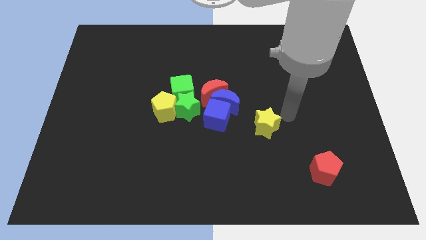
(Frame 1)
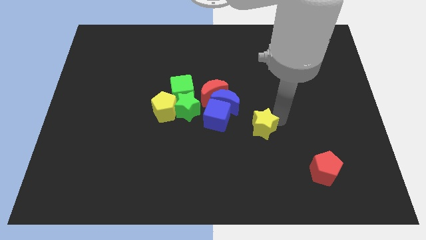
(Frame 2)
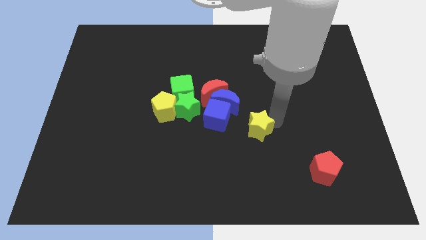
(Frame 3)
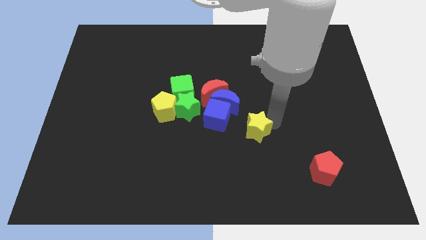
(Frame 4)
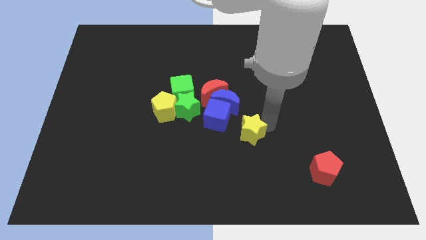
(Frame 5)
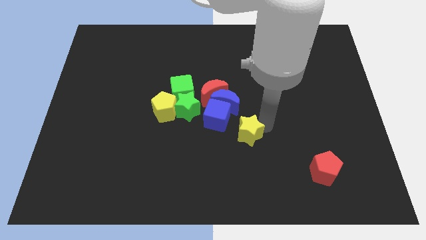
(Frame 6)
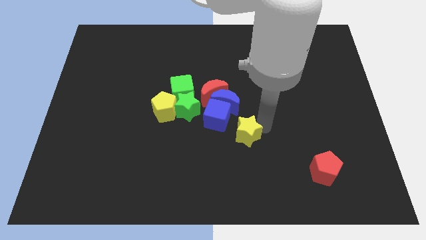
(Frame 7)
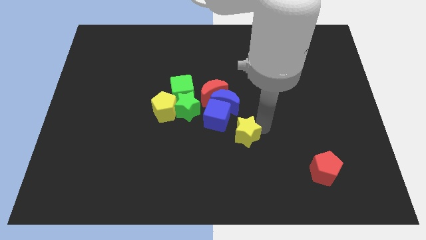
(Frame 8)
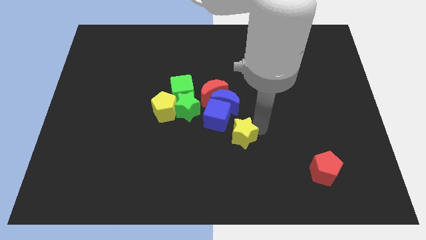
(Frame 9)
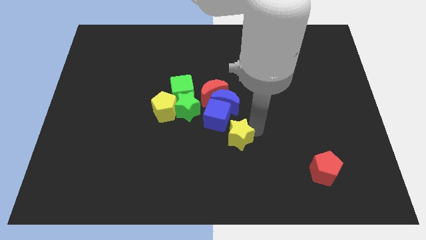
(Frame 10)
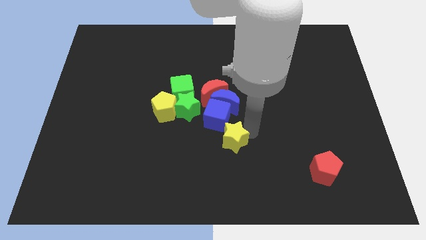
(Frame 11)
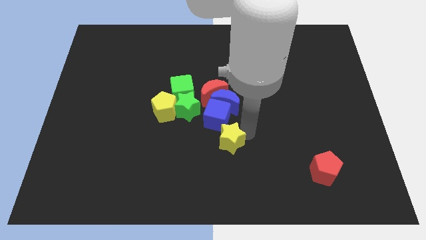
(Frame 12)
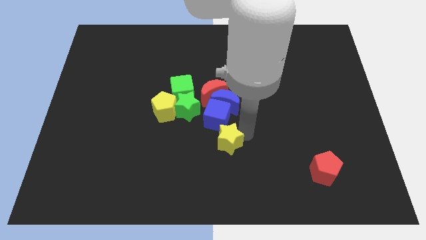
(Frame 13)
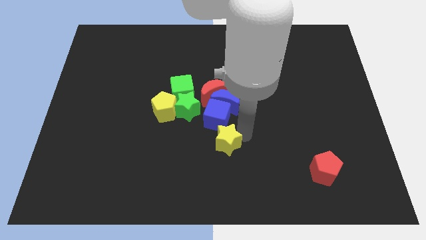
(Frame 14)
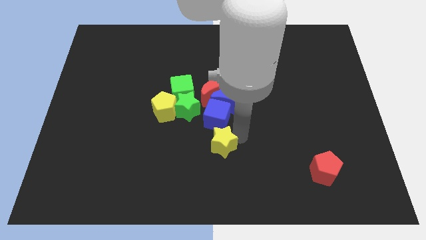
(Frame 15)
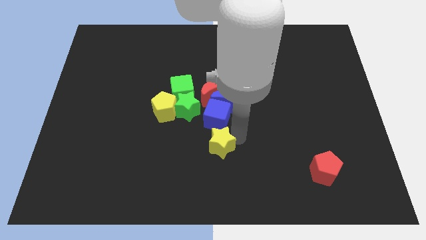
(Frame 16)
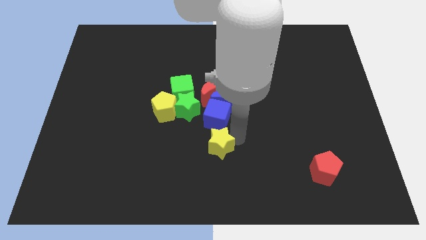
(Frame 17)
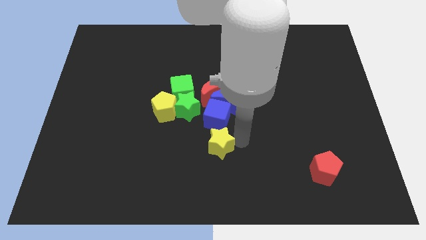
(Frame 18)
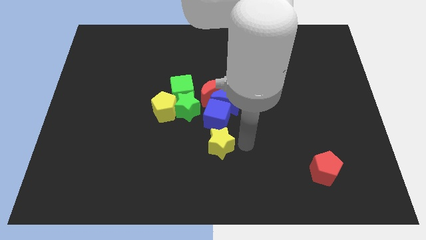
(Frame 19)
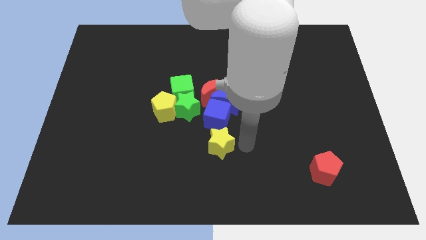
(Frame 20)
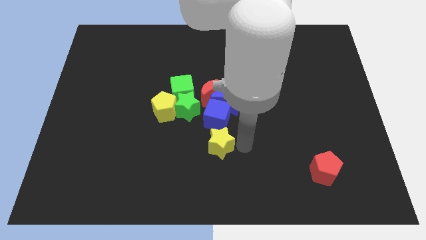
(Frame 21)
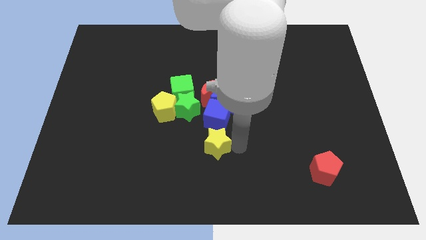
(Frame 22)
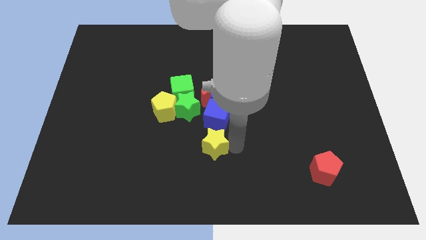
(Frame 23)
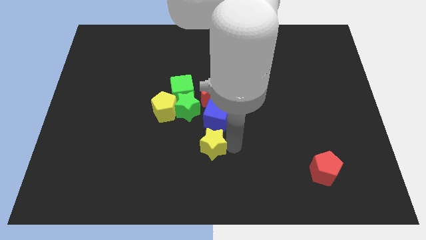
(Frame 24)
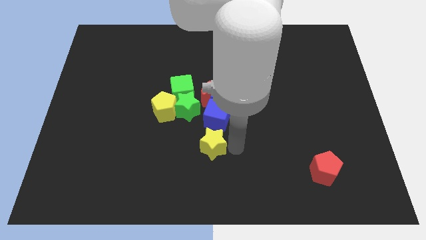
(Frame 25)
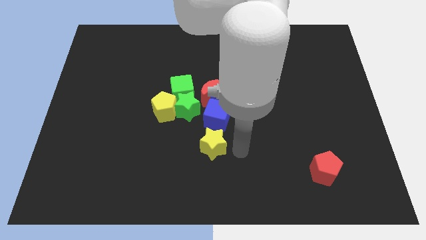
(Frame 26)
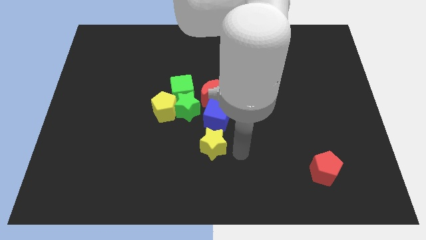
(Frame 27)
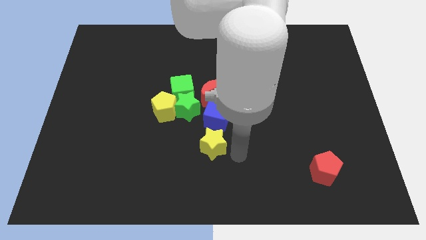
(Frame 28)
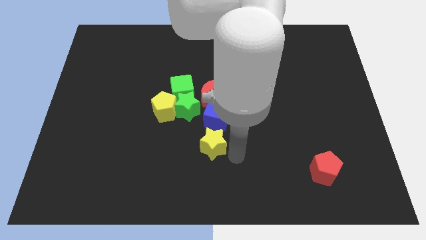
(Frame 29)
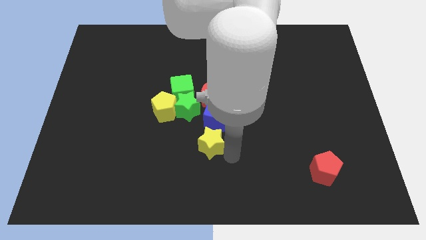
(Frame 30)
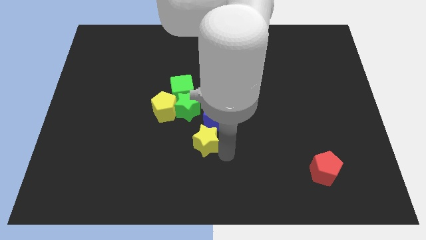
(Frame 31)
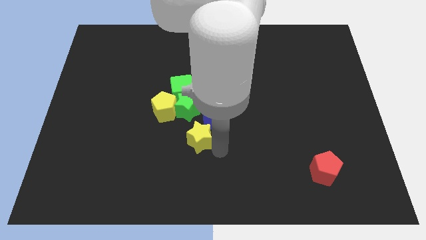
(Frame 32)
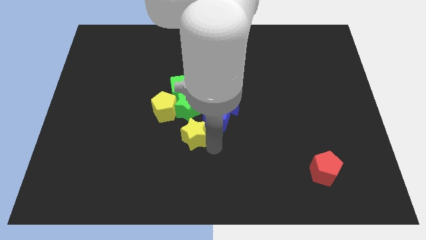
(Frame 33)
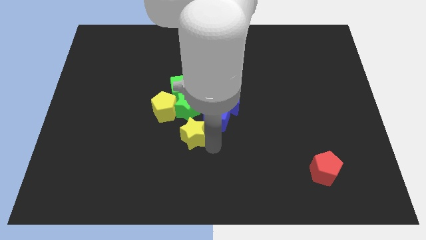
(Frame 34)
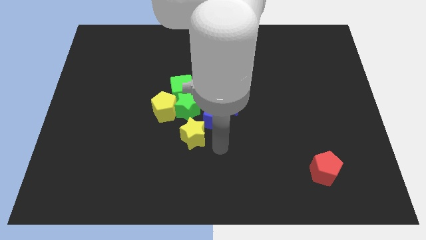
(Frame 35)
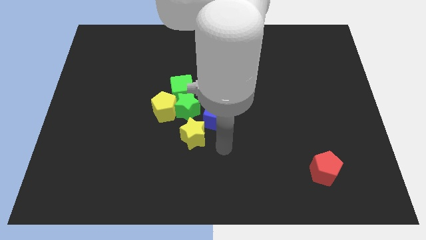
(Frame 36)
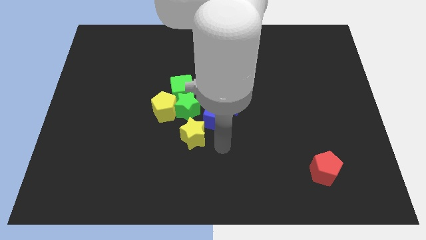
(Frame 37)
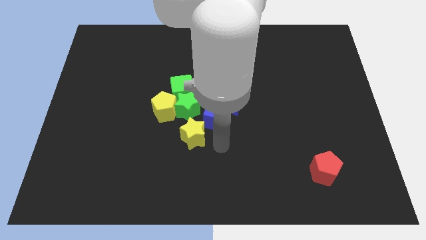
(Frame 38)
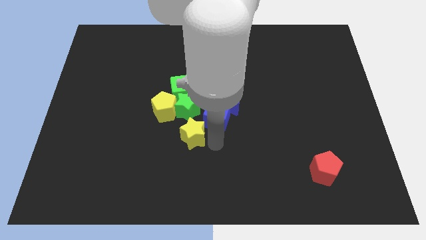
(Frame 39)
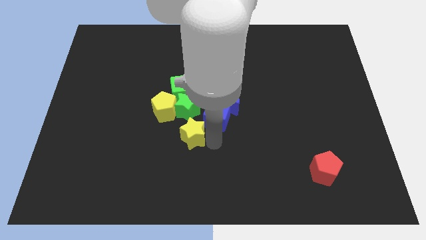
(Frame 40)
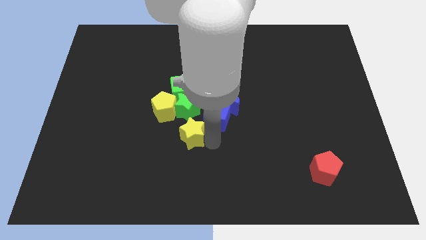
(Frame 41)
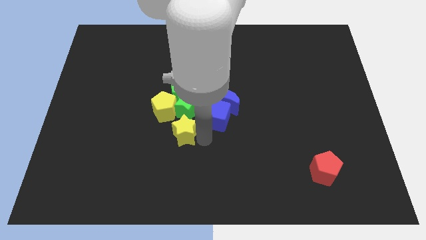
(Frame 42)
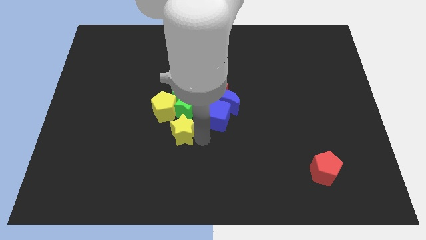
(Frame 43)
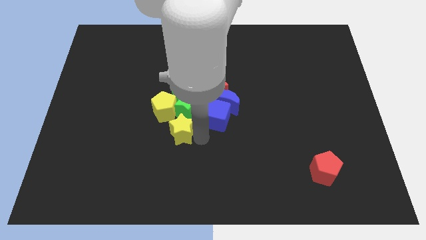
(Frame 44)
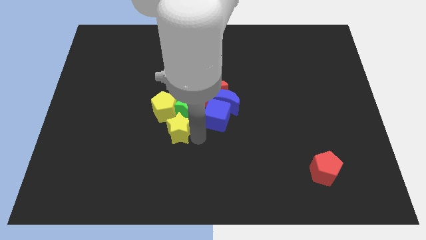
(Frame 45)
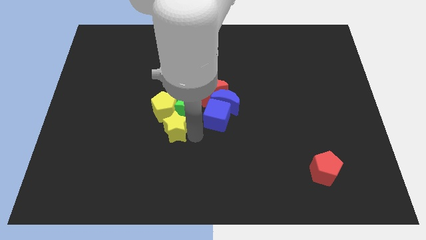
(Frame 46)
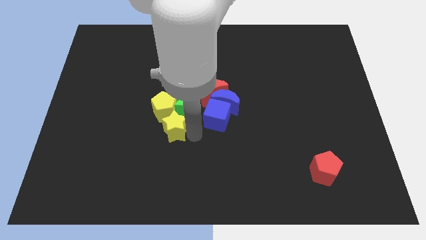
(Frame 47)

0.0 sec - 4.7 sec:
place the yellow star to the bottom right of the yellow pentagon

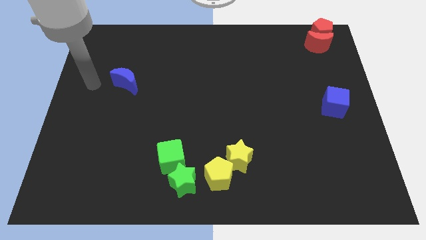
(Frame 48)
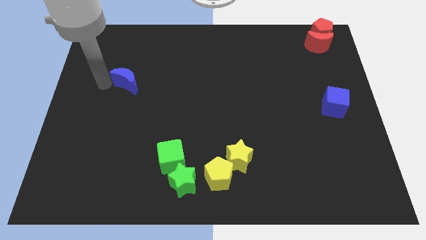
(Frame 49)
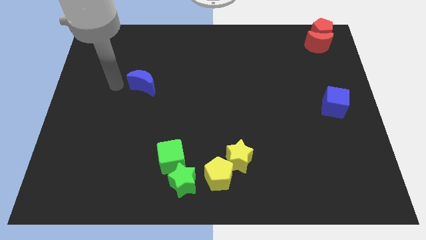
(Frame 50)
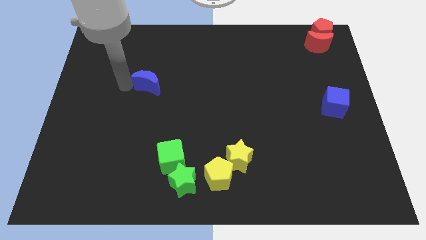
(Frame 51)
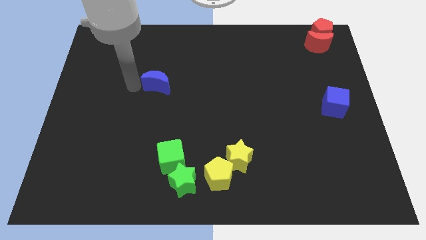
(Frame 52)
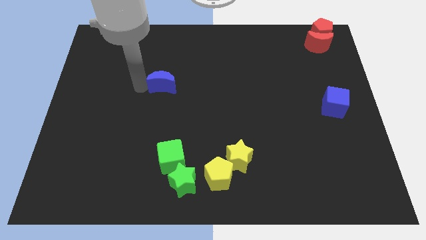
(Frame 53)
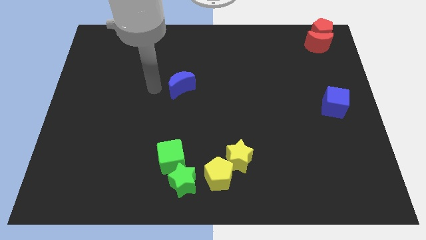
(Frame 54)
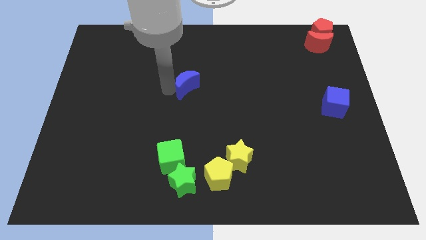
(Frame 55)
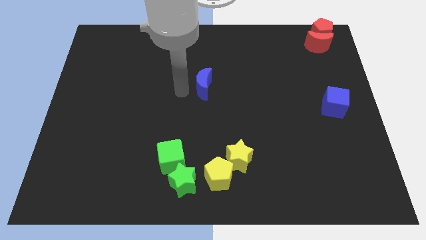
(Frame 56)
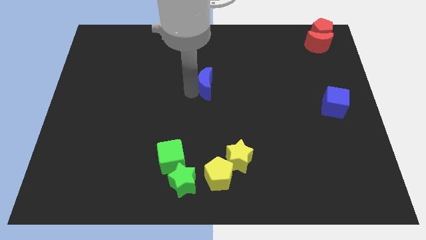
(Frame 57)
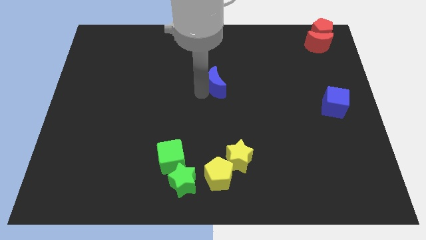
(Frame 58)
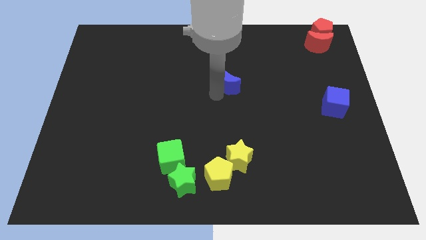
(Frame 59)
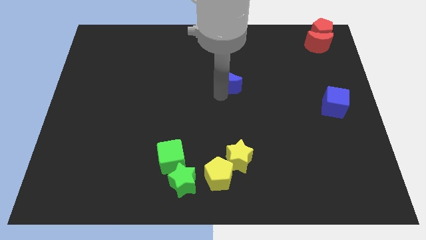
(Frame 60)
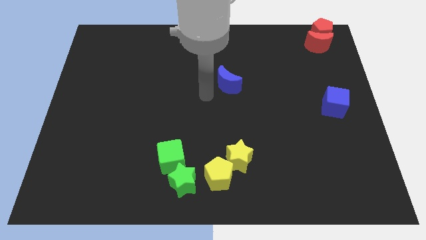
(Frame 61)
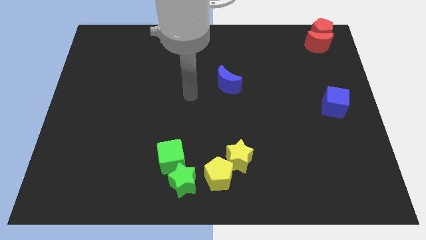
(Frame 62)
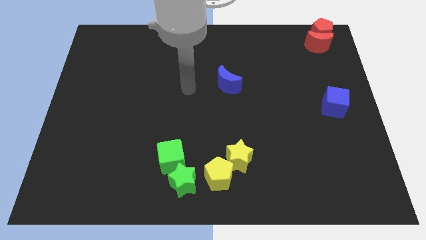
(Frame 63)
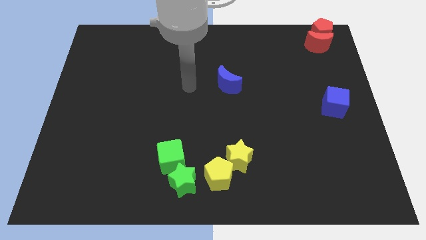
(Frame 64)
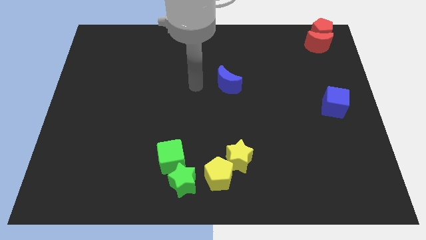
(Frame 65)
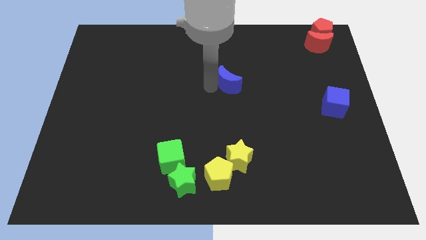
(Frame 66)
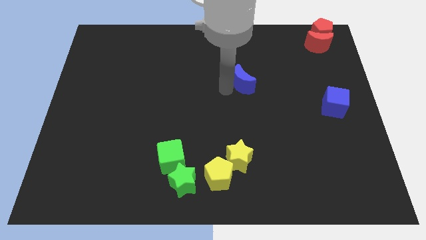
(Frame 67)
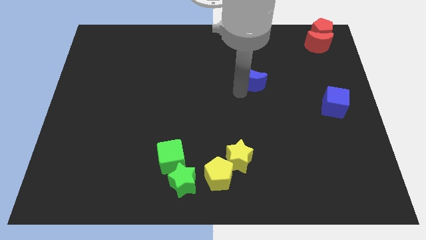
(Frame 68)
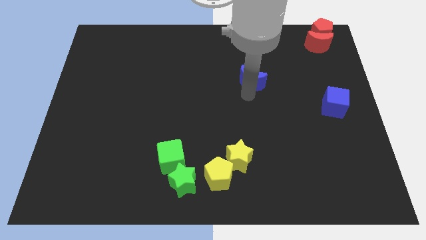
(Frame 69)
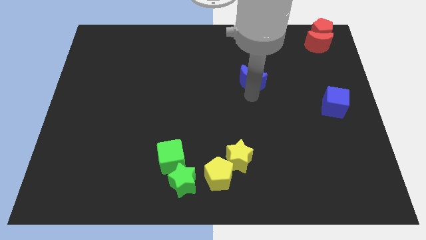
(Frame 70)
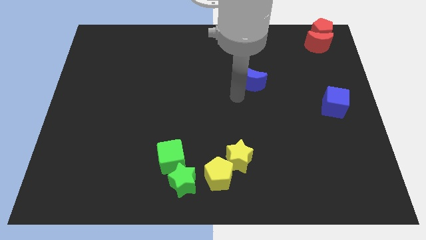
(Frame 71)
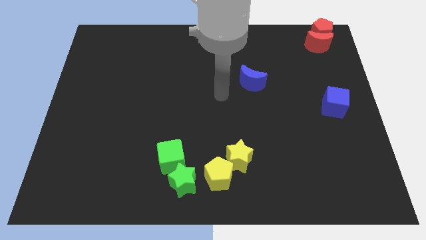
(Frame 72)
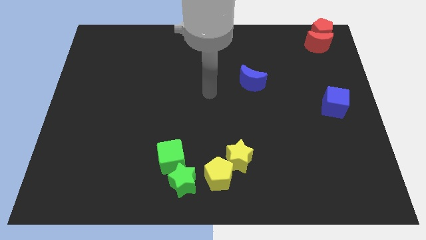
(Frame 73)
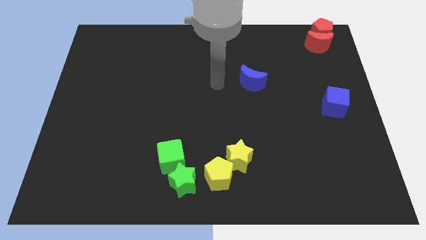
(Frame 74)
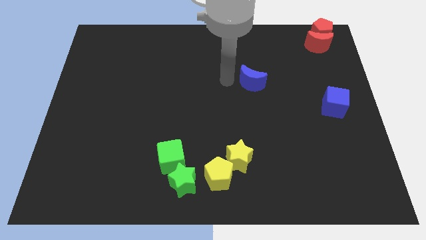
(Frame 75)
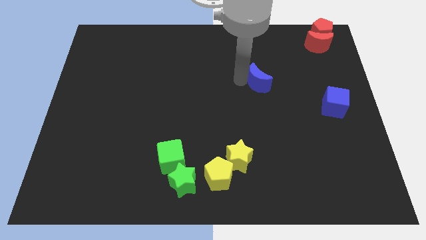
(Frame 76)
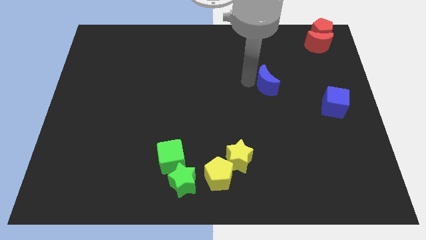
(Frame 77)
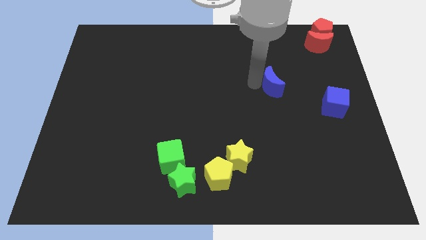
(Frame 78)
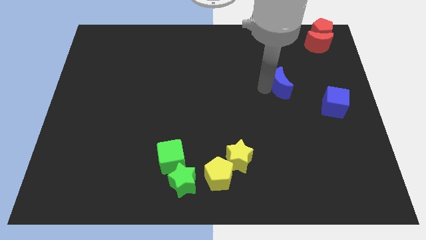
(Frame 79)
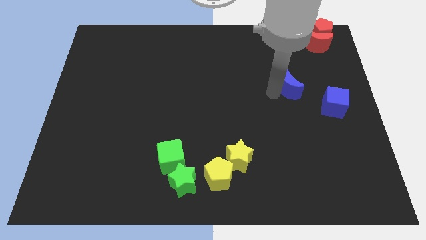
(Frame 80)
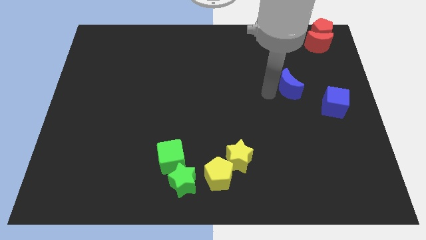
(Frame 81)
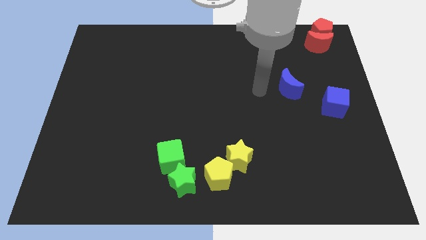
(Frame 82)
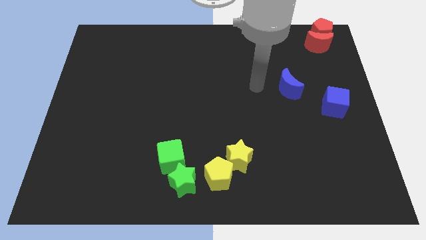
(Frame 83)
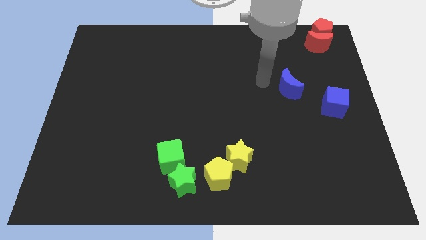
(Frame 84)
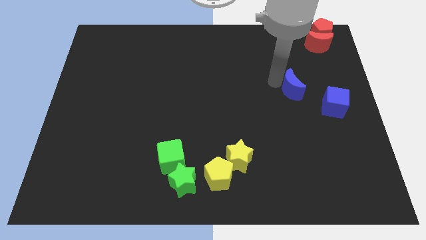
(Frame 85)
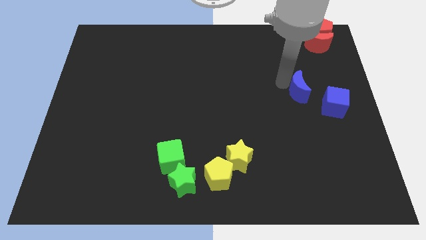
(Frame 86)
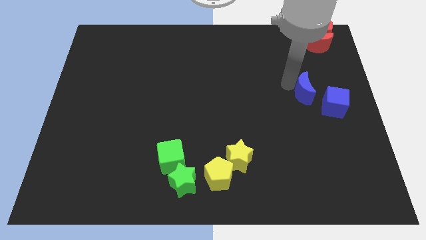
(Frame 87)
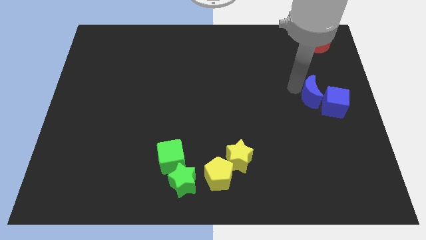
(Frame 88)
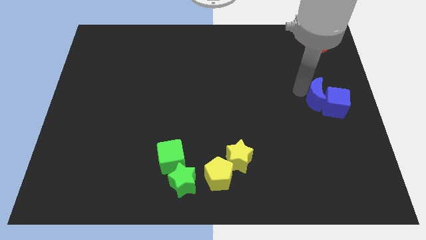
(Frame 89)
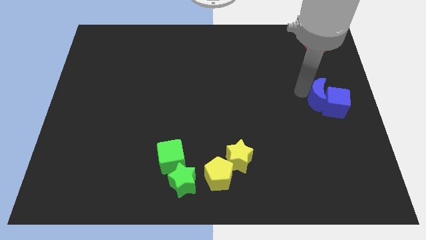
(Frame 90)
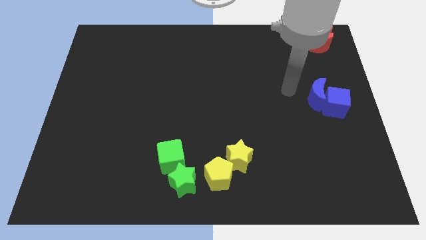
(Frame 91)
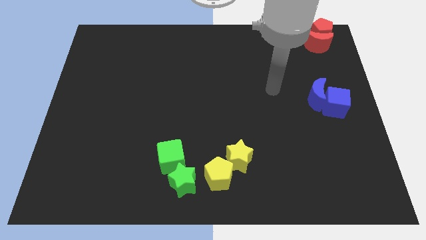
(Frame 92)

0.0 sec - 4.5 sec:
move the blue crescent to the left of the blue cube
